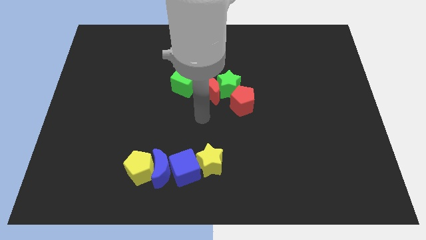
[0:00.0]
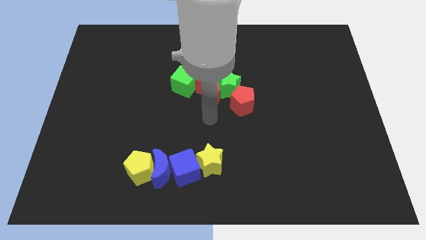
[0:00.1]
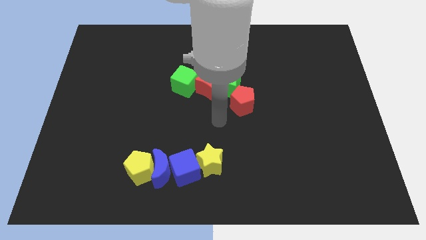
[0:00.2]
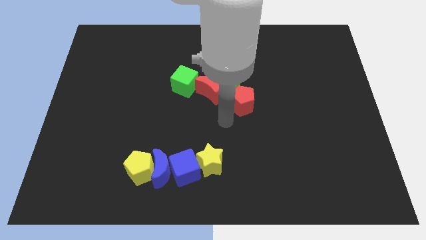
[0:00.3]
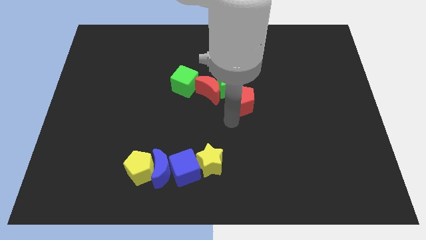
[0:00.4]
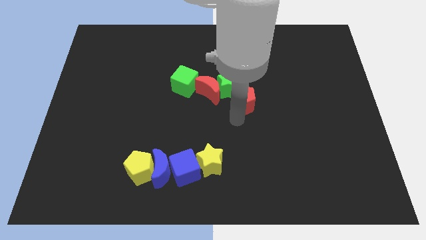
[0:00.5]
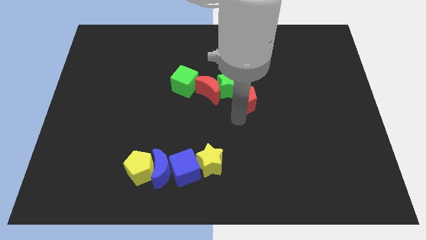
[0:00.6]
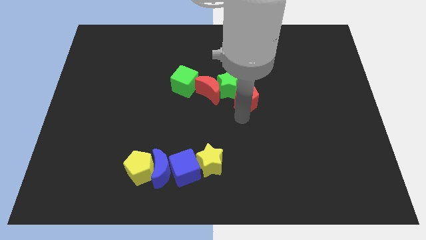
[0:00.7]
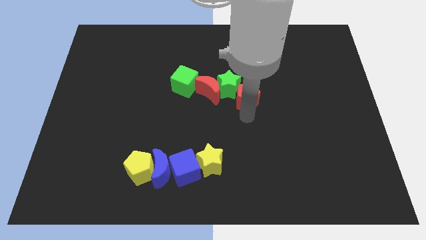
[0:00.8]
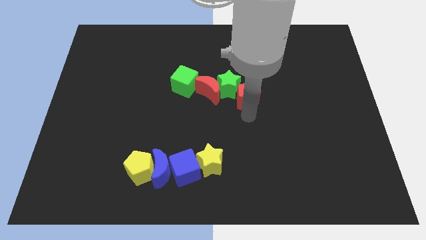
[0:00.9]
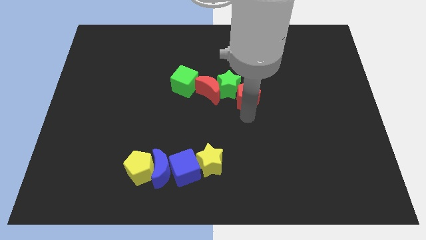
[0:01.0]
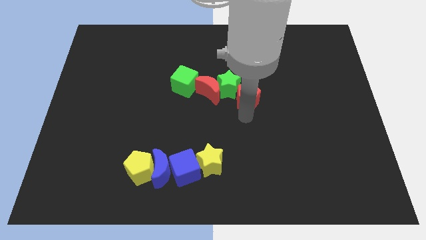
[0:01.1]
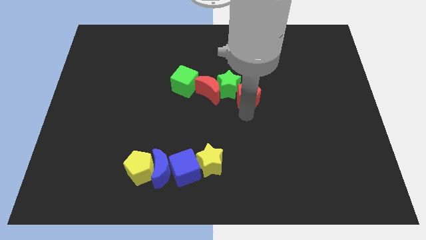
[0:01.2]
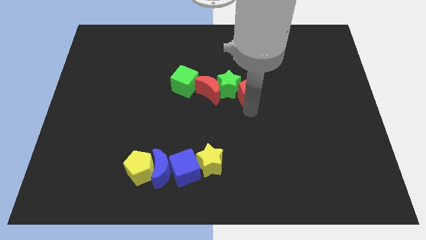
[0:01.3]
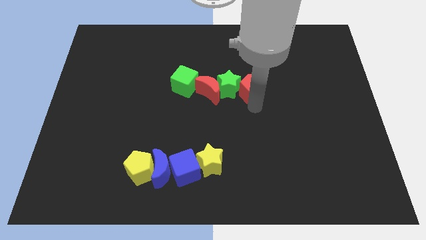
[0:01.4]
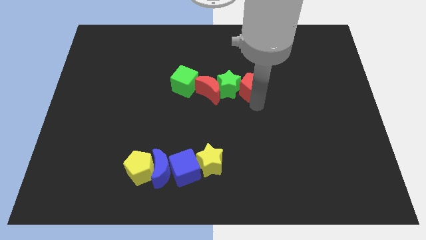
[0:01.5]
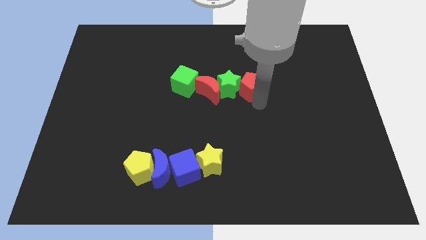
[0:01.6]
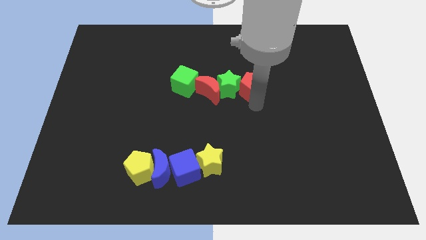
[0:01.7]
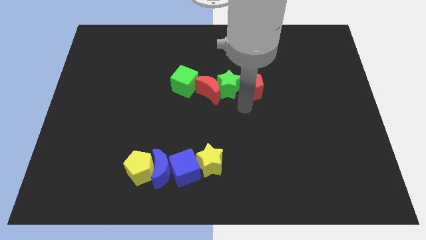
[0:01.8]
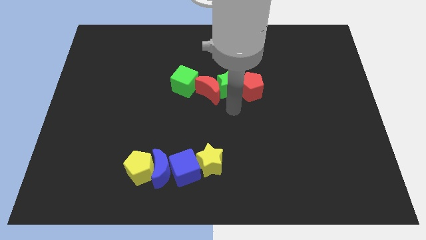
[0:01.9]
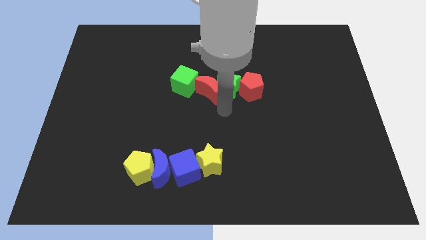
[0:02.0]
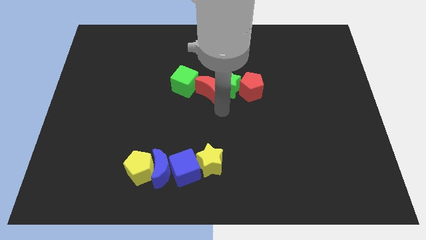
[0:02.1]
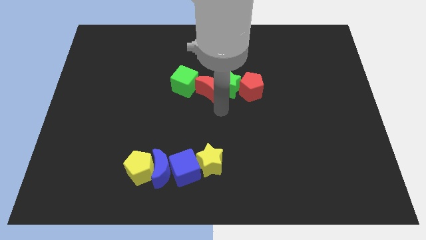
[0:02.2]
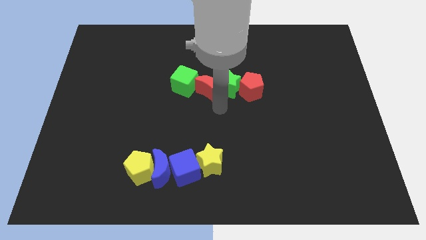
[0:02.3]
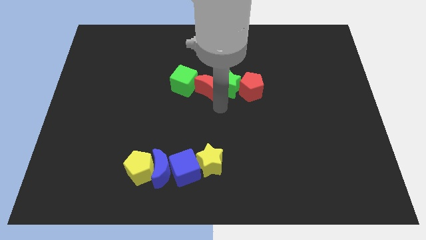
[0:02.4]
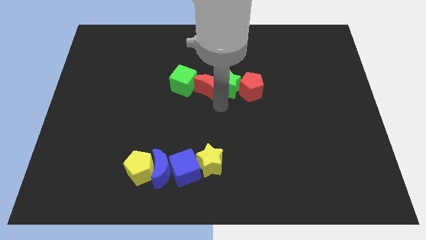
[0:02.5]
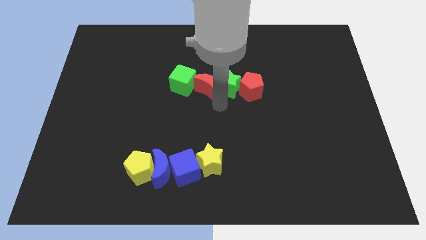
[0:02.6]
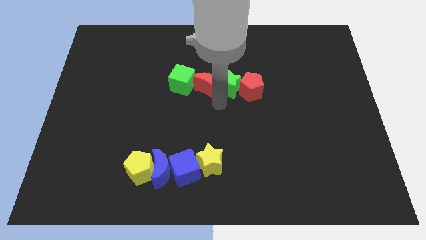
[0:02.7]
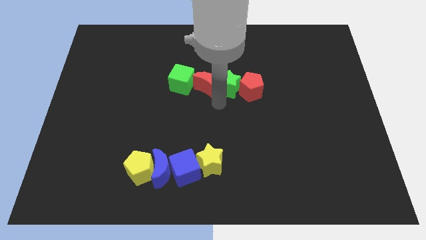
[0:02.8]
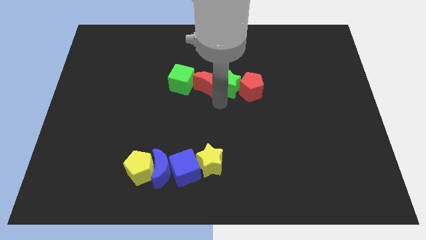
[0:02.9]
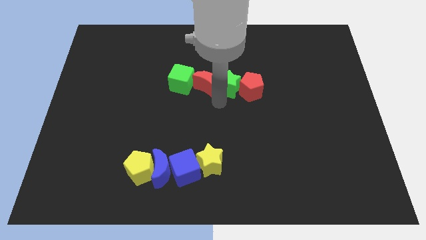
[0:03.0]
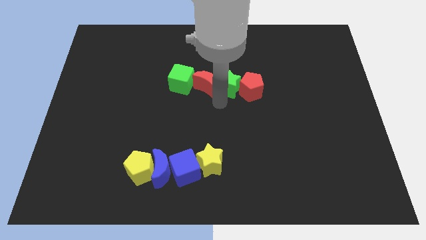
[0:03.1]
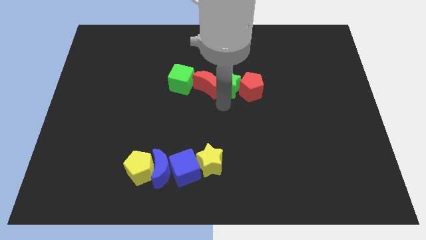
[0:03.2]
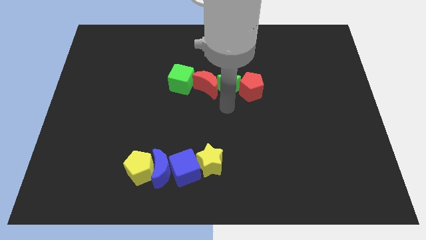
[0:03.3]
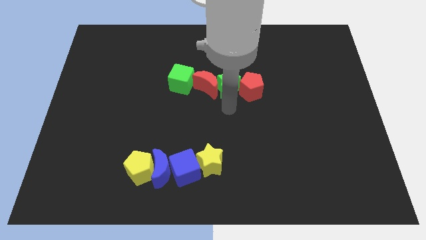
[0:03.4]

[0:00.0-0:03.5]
slightly changes in the que of objects

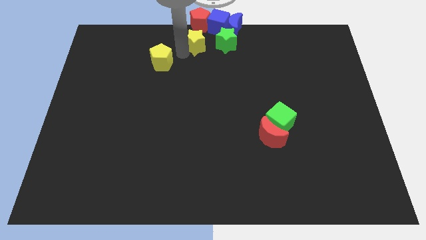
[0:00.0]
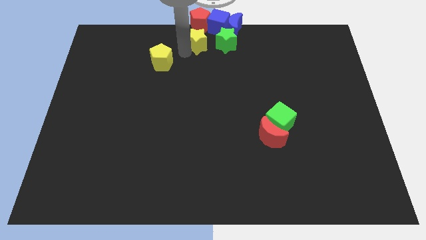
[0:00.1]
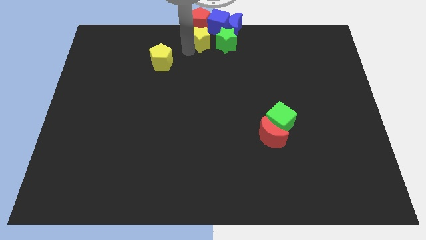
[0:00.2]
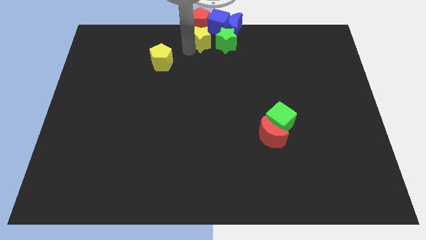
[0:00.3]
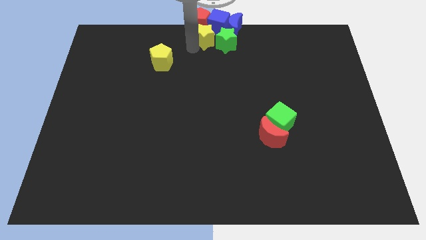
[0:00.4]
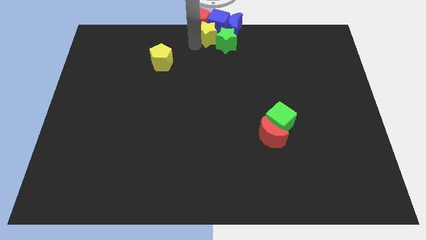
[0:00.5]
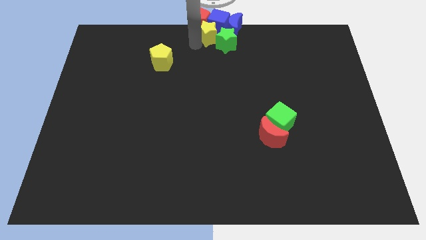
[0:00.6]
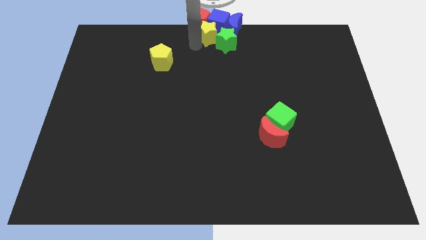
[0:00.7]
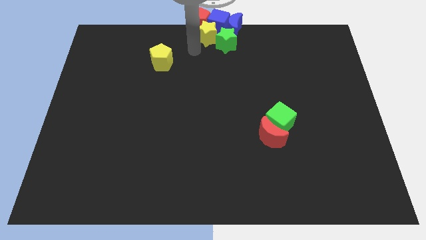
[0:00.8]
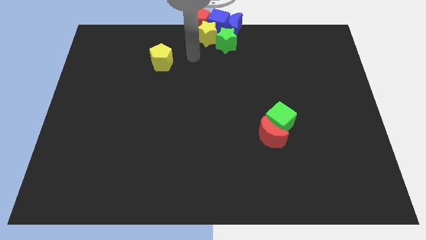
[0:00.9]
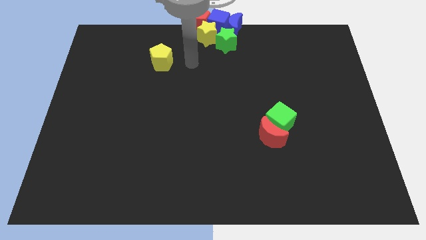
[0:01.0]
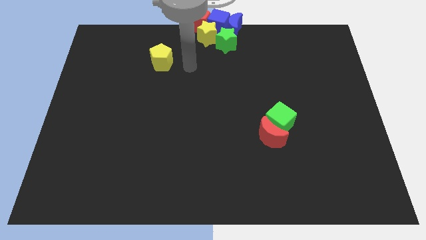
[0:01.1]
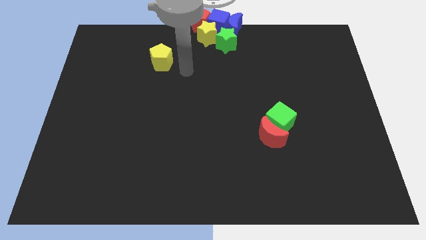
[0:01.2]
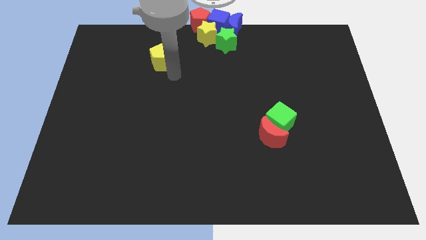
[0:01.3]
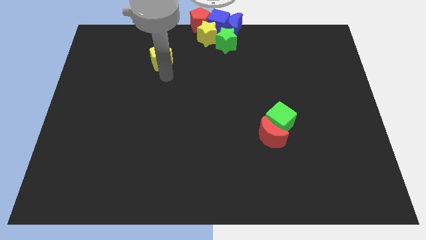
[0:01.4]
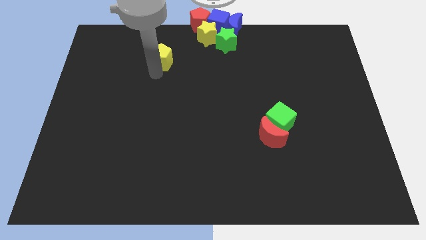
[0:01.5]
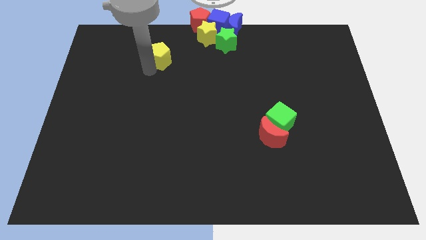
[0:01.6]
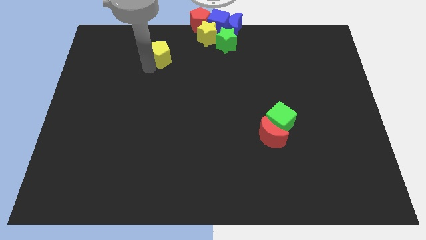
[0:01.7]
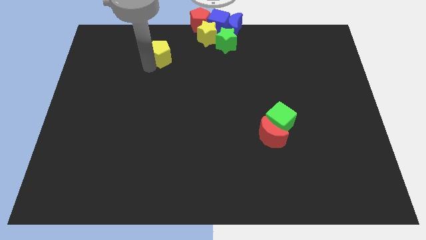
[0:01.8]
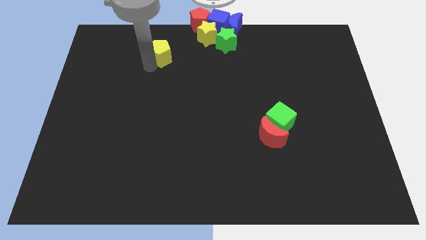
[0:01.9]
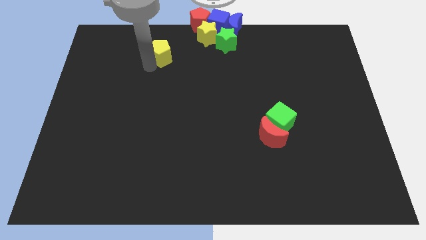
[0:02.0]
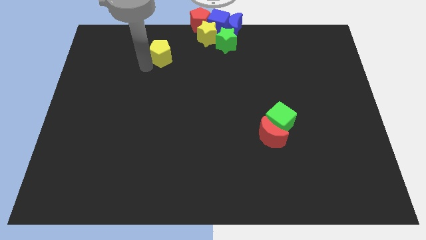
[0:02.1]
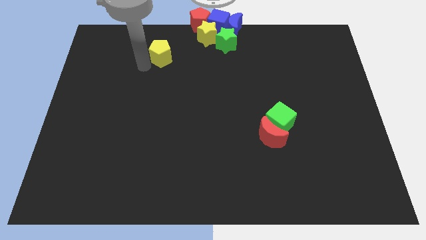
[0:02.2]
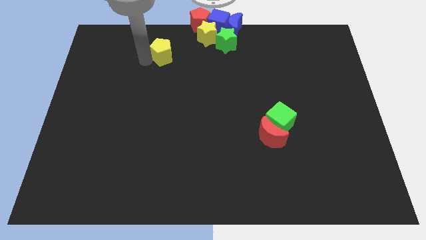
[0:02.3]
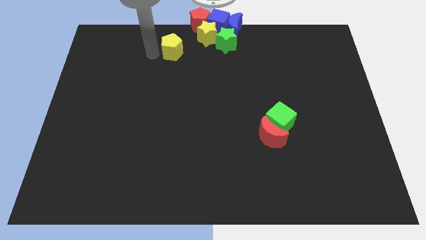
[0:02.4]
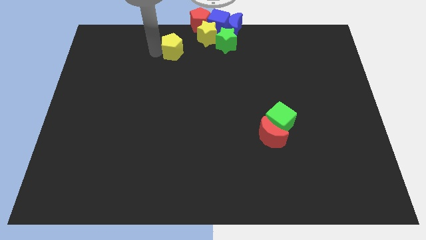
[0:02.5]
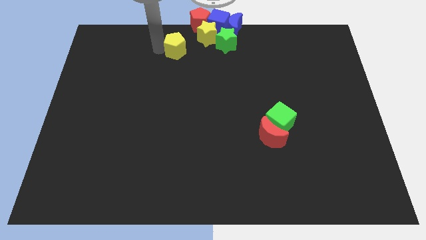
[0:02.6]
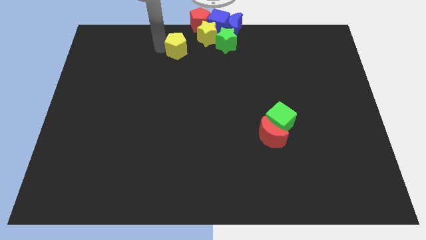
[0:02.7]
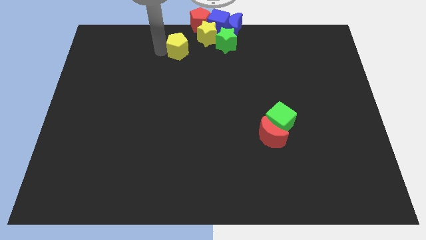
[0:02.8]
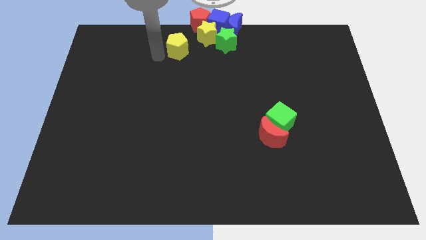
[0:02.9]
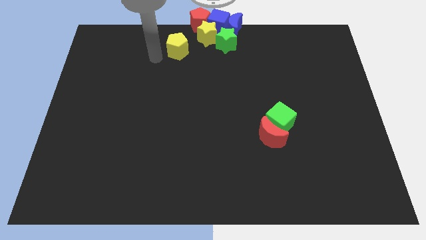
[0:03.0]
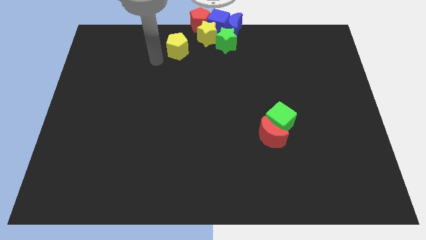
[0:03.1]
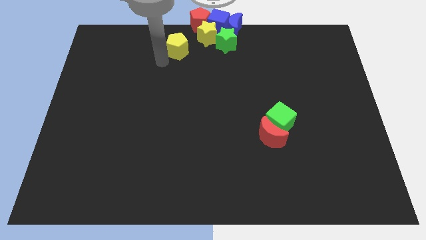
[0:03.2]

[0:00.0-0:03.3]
push the yellow star into the group of blocks

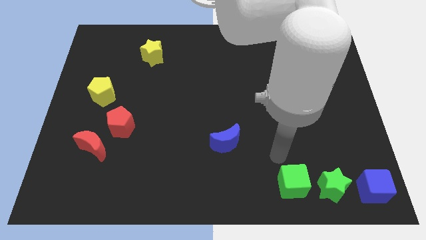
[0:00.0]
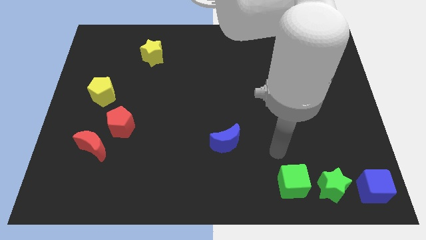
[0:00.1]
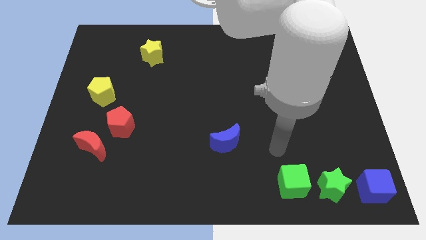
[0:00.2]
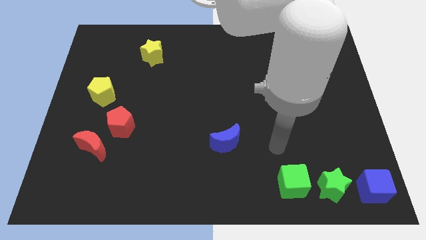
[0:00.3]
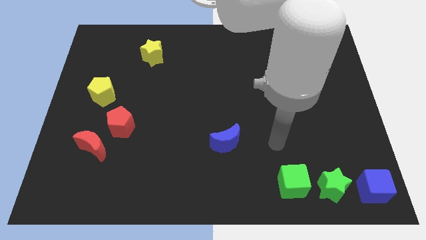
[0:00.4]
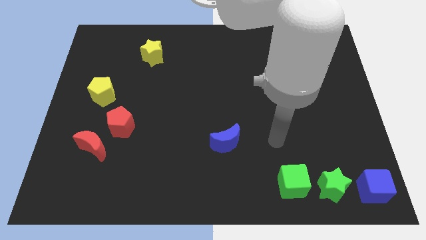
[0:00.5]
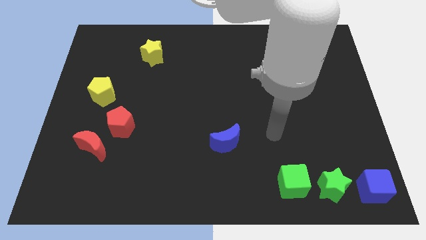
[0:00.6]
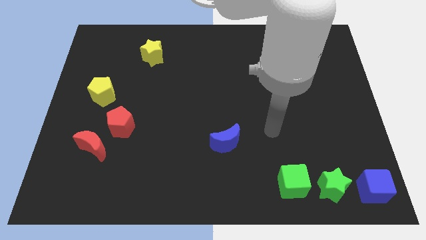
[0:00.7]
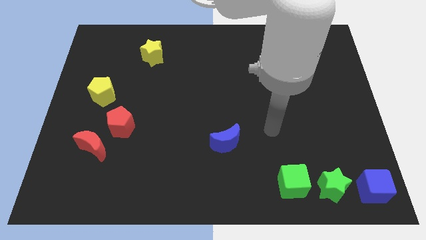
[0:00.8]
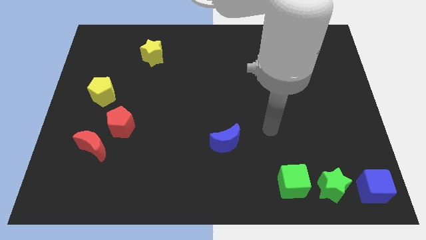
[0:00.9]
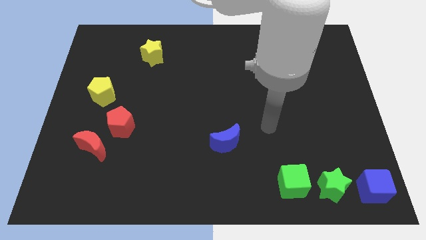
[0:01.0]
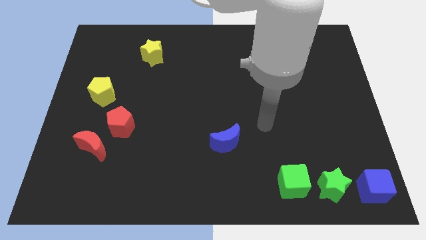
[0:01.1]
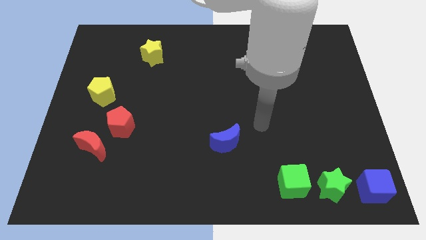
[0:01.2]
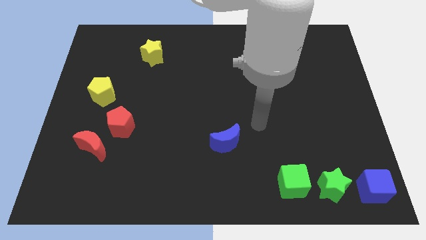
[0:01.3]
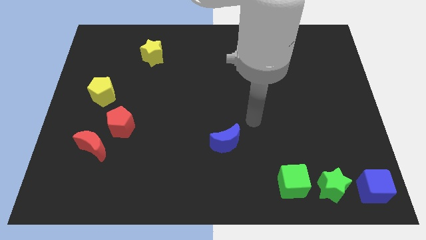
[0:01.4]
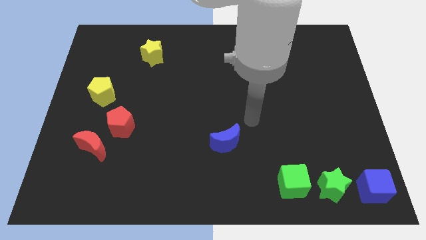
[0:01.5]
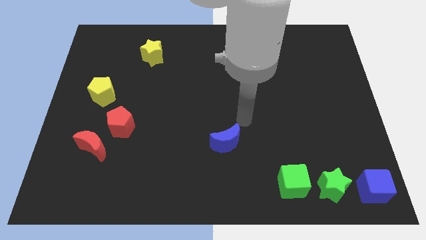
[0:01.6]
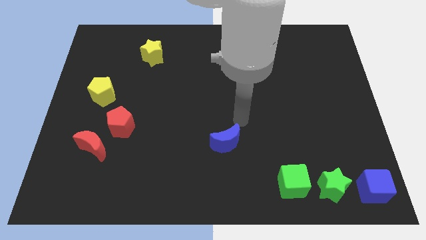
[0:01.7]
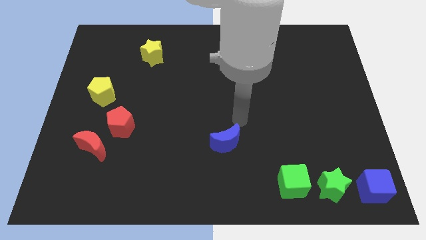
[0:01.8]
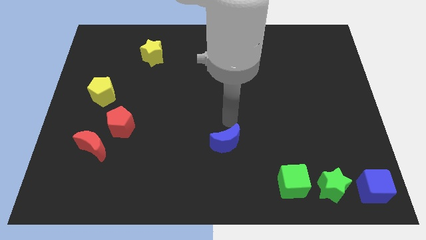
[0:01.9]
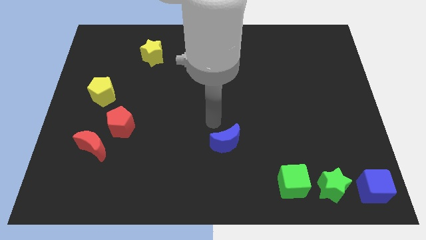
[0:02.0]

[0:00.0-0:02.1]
place your hand above the blue moon
